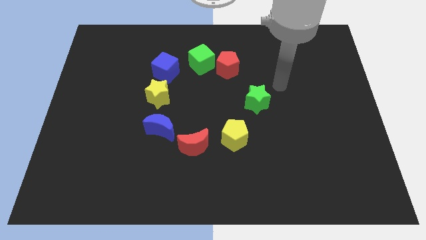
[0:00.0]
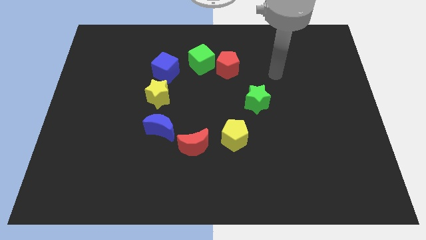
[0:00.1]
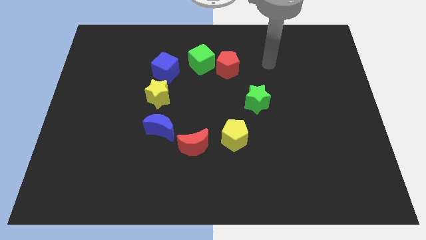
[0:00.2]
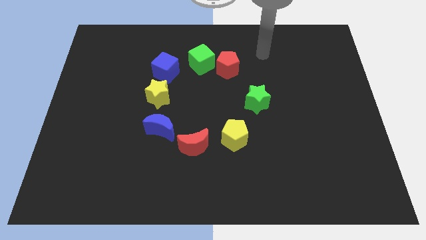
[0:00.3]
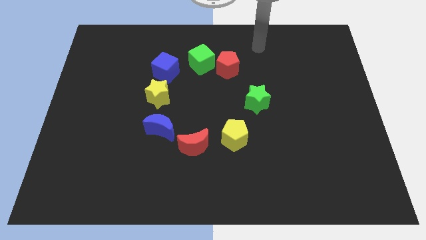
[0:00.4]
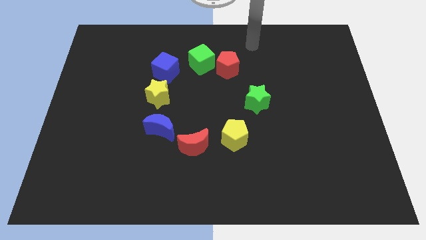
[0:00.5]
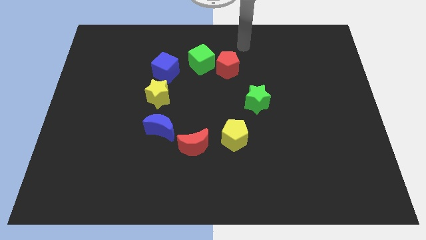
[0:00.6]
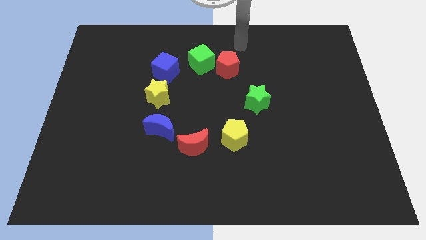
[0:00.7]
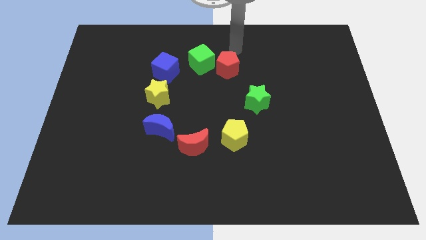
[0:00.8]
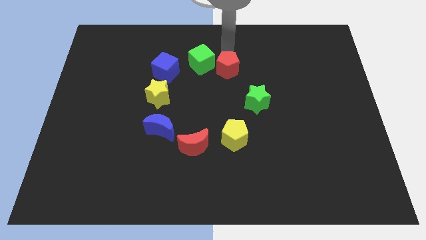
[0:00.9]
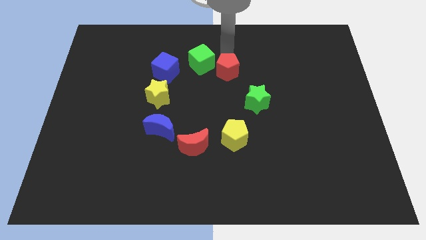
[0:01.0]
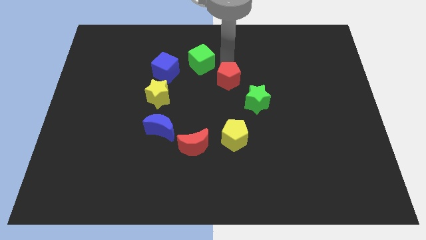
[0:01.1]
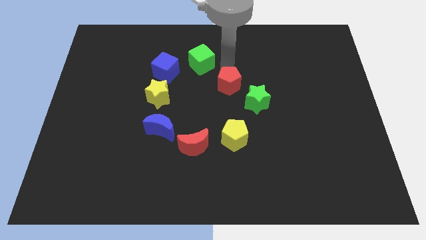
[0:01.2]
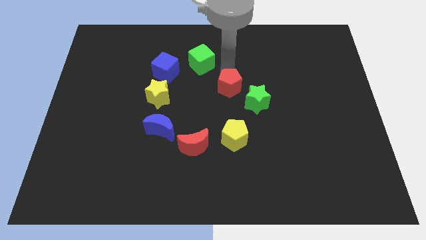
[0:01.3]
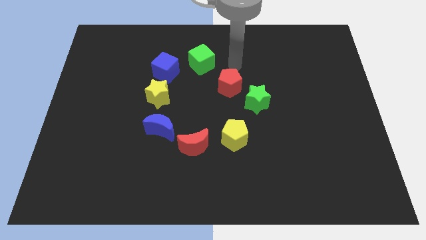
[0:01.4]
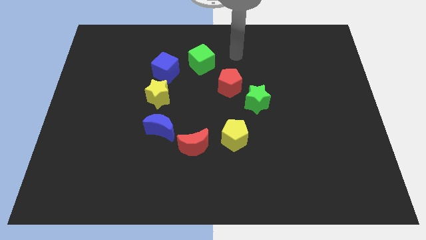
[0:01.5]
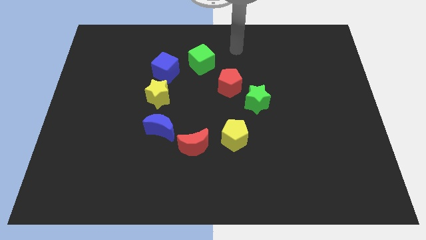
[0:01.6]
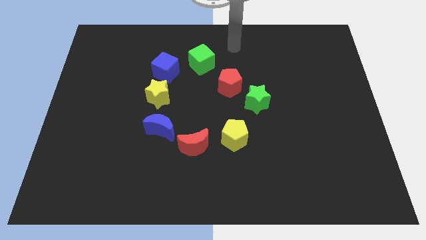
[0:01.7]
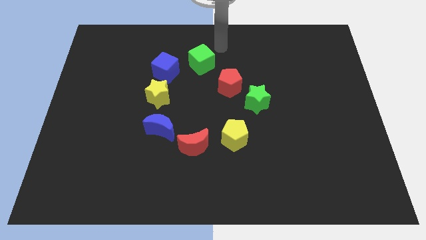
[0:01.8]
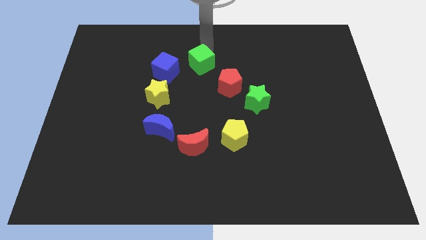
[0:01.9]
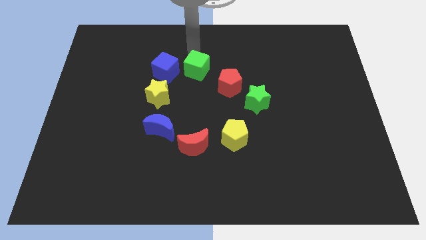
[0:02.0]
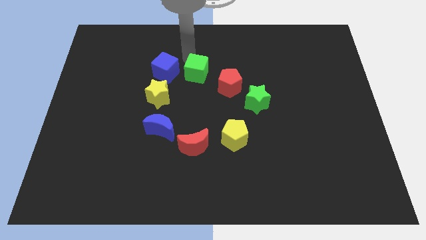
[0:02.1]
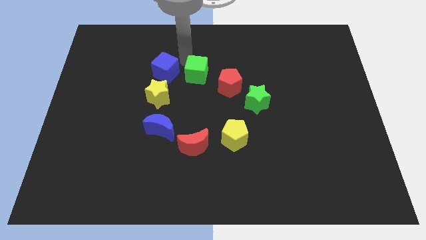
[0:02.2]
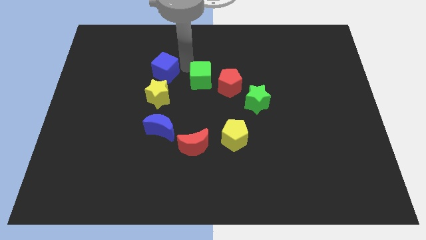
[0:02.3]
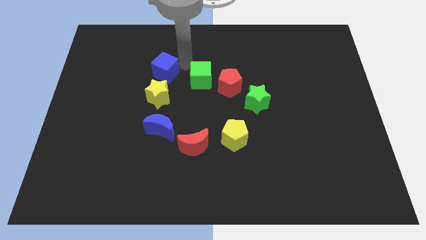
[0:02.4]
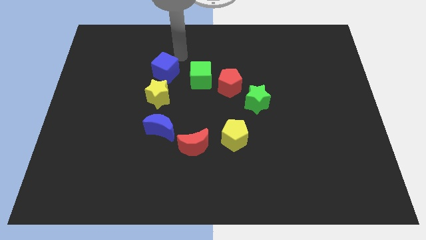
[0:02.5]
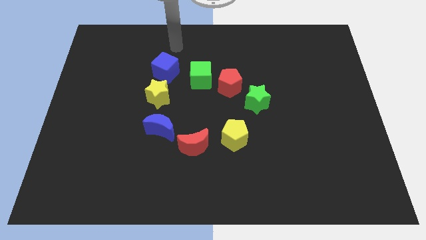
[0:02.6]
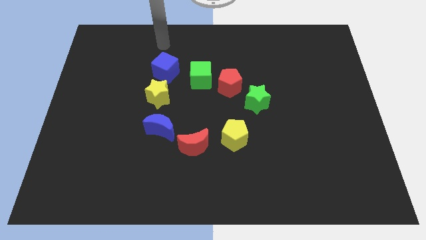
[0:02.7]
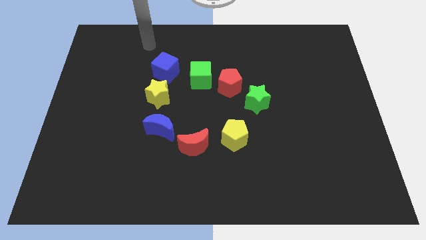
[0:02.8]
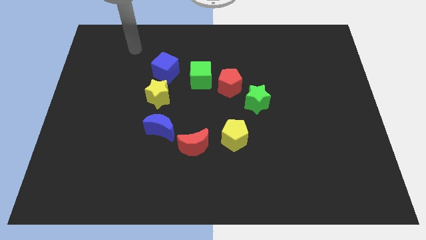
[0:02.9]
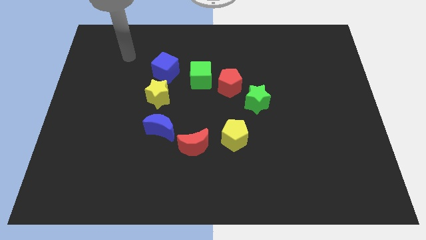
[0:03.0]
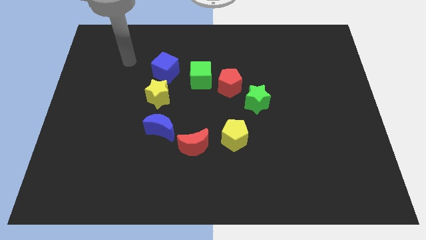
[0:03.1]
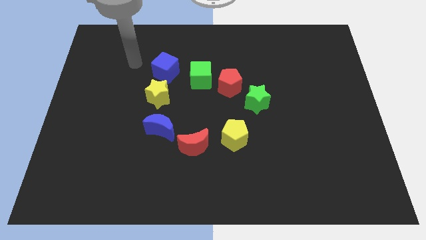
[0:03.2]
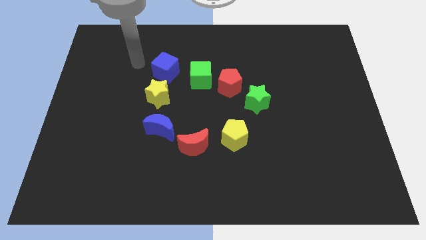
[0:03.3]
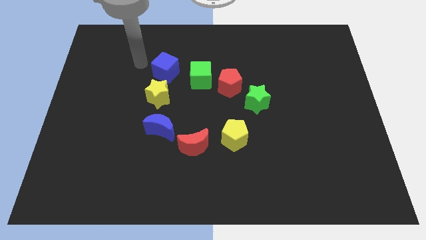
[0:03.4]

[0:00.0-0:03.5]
move the red pentagon towards the top side of the yellow pentagon

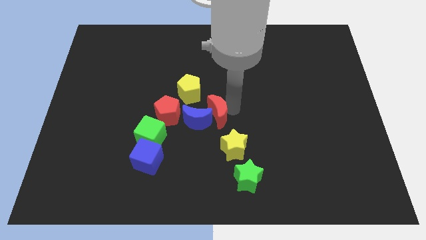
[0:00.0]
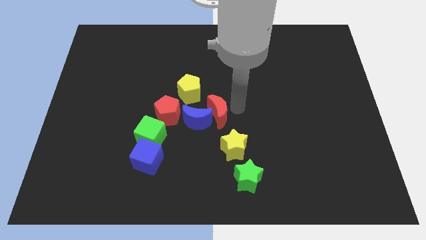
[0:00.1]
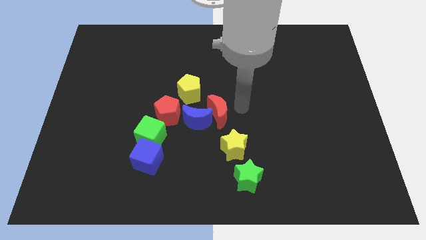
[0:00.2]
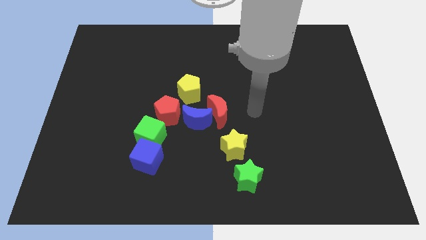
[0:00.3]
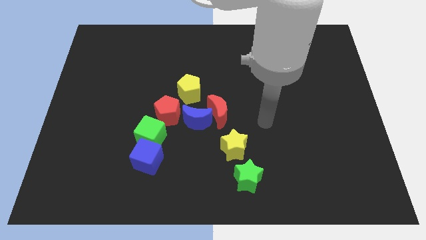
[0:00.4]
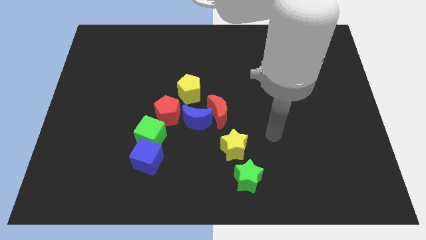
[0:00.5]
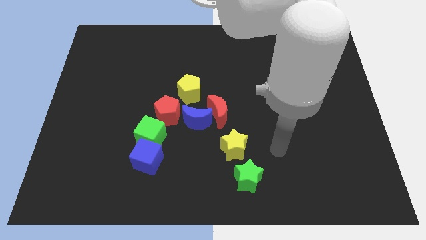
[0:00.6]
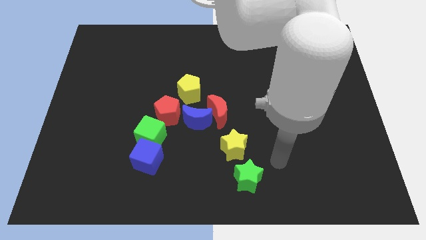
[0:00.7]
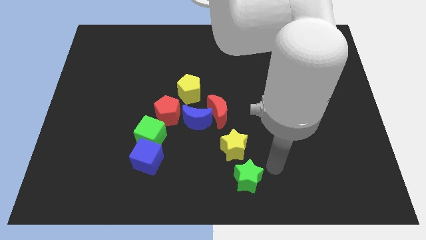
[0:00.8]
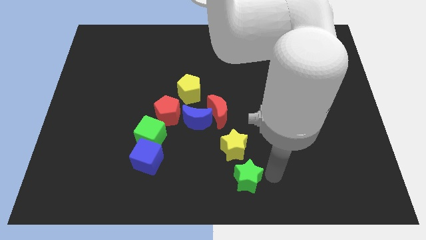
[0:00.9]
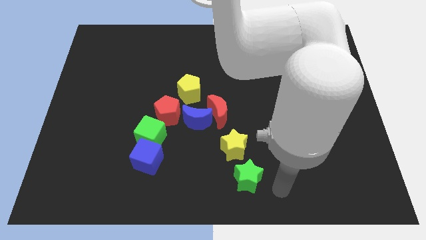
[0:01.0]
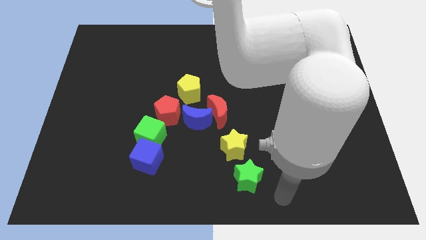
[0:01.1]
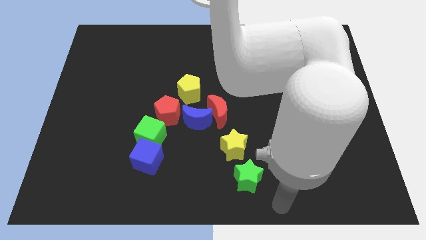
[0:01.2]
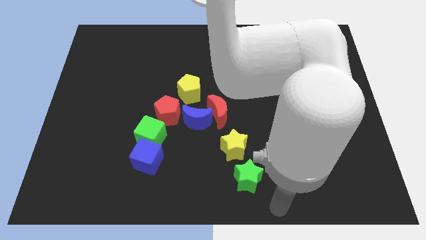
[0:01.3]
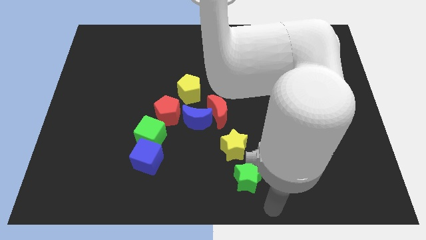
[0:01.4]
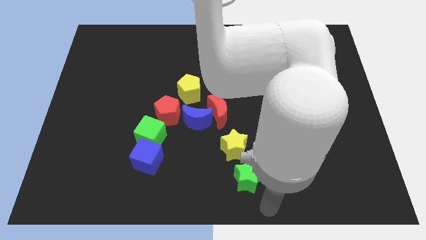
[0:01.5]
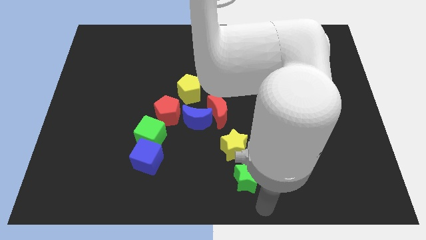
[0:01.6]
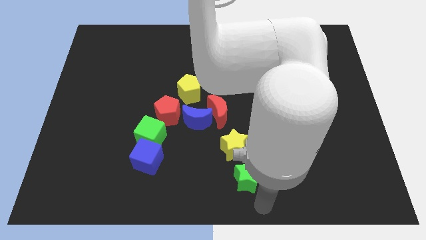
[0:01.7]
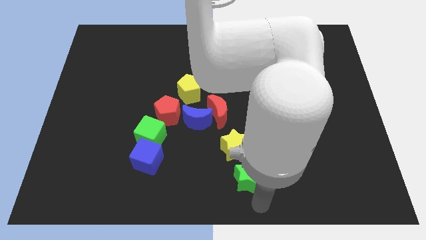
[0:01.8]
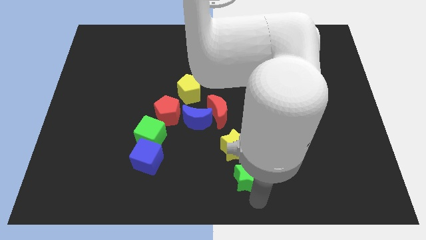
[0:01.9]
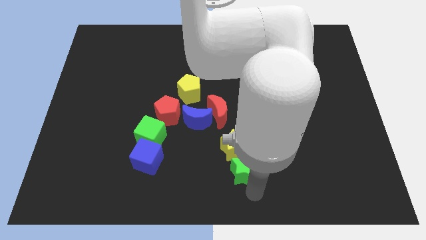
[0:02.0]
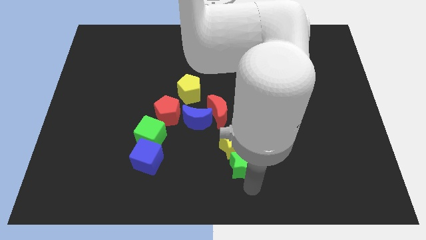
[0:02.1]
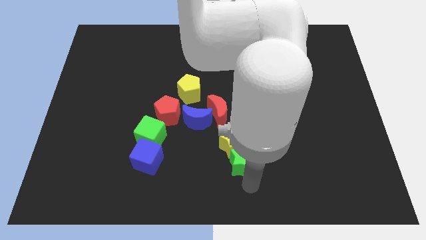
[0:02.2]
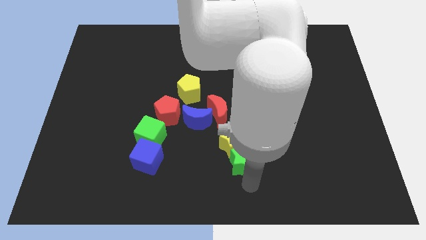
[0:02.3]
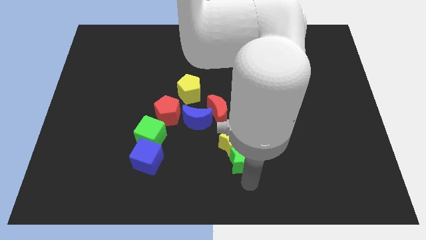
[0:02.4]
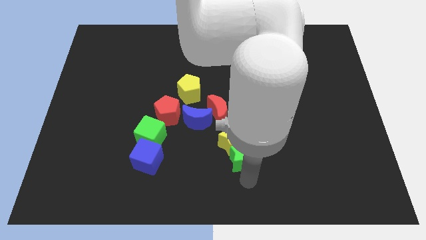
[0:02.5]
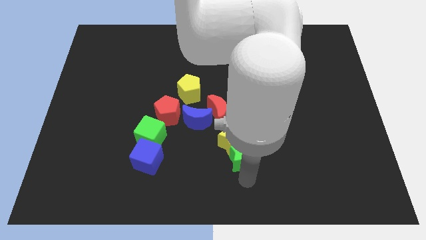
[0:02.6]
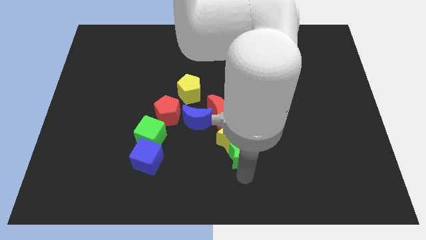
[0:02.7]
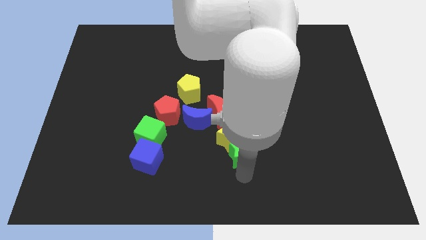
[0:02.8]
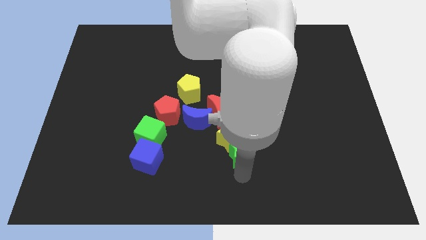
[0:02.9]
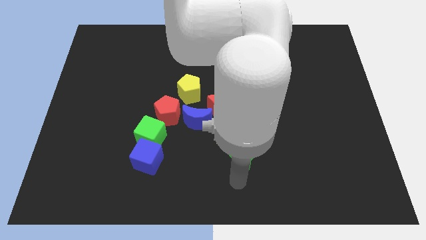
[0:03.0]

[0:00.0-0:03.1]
push the green and yellow stars towards the red crescent

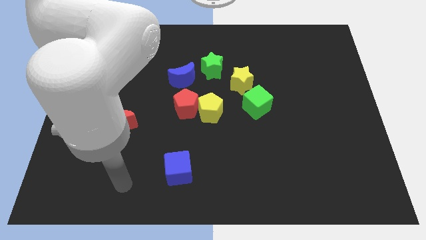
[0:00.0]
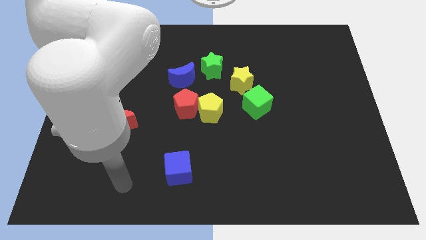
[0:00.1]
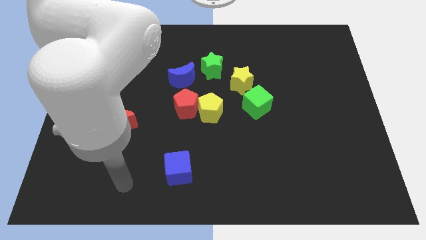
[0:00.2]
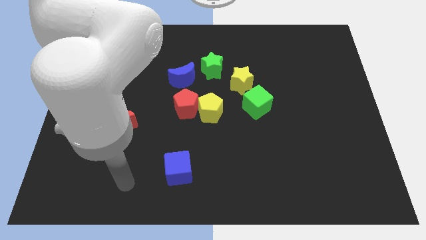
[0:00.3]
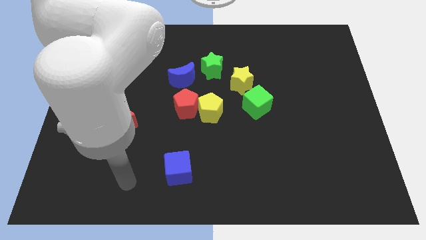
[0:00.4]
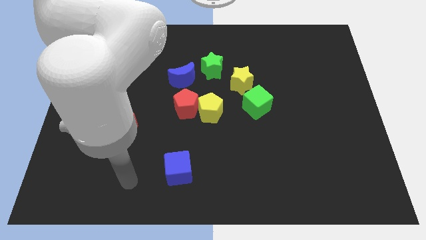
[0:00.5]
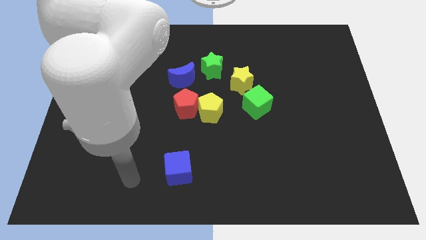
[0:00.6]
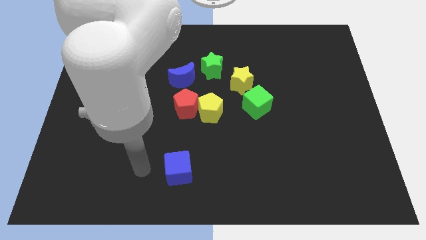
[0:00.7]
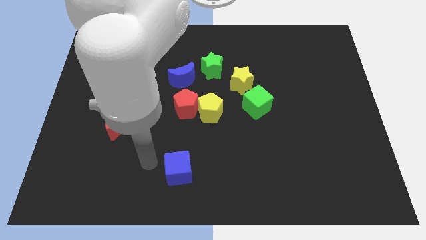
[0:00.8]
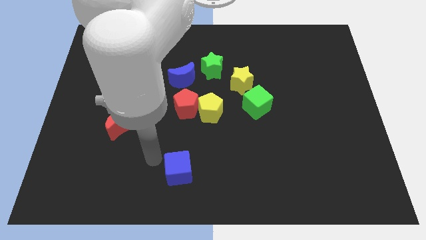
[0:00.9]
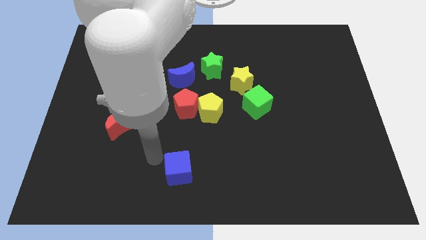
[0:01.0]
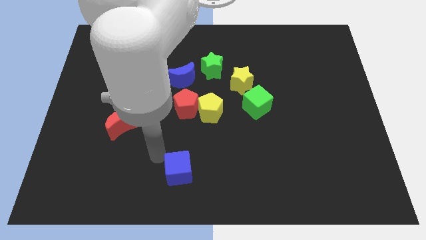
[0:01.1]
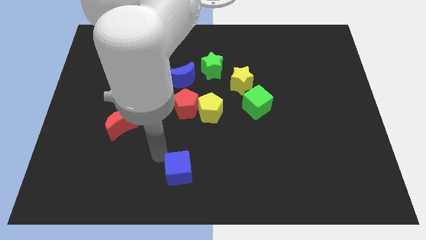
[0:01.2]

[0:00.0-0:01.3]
move your arm to the top left of blue cube

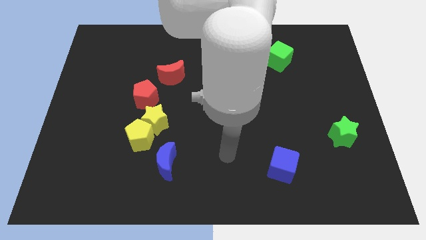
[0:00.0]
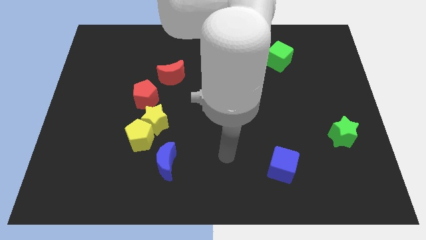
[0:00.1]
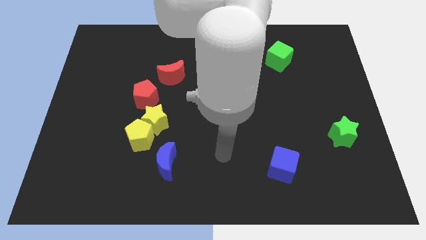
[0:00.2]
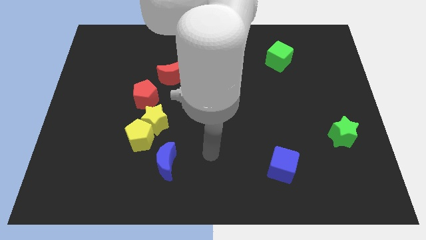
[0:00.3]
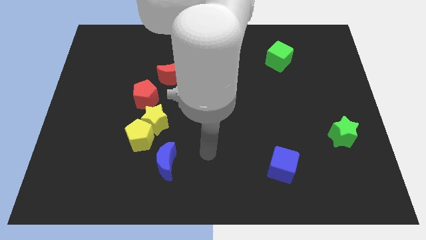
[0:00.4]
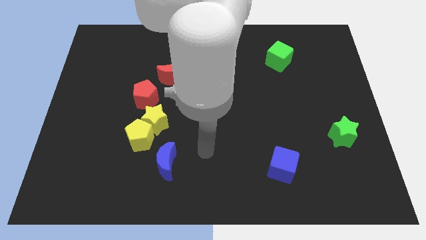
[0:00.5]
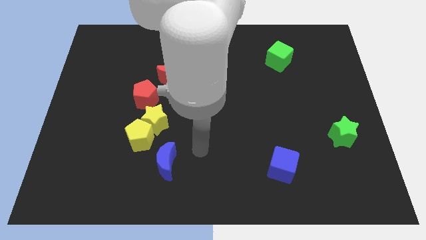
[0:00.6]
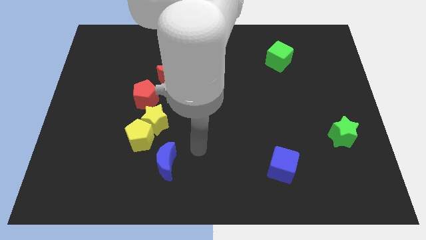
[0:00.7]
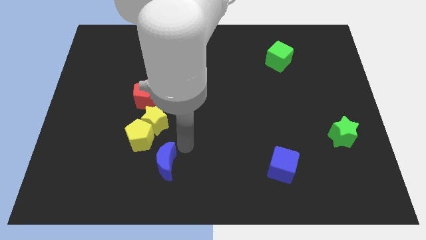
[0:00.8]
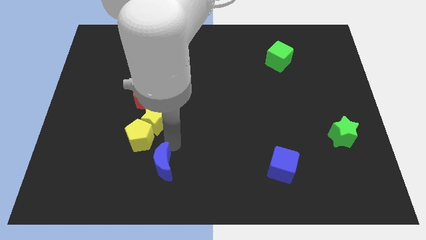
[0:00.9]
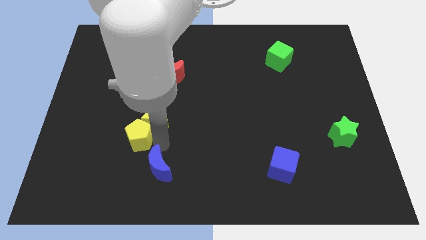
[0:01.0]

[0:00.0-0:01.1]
push the blue moon to the left slightly
